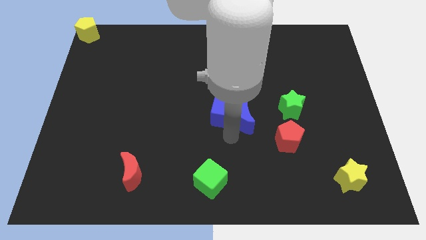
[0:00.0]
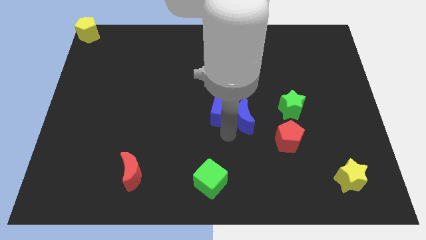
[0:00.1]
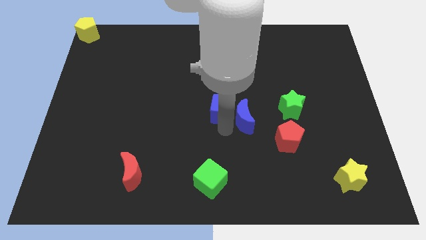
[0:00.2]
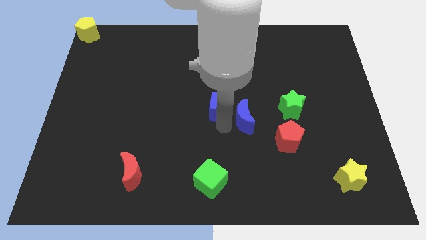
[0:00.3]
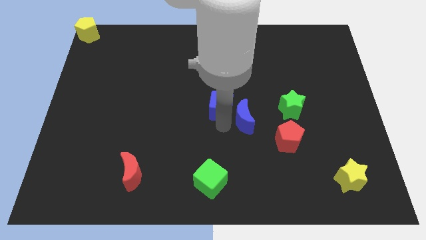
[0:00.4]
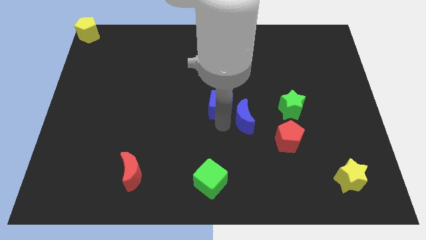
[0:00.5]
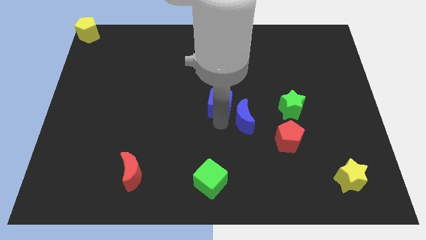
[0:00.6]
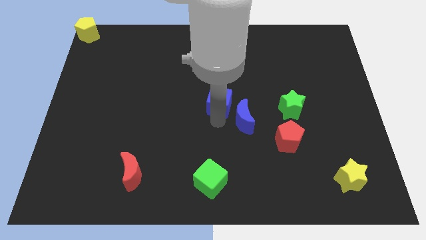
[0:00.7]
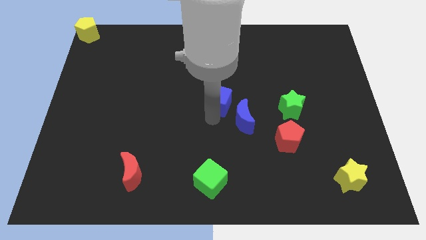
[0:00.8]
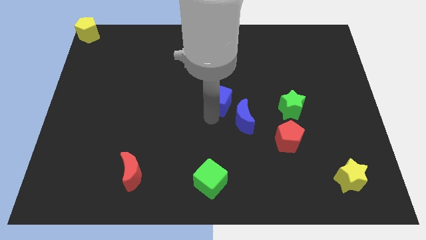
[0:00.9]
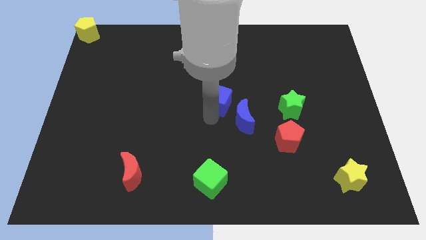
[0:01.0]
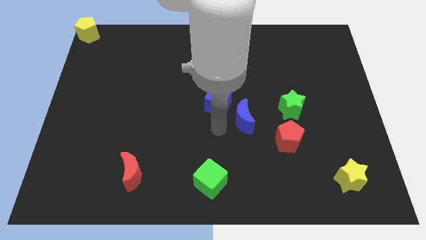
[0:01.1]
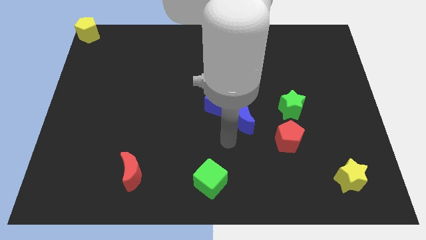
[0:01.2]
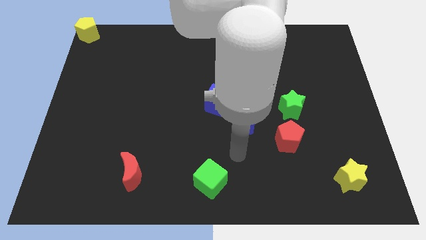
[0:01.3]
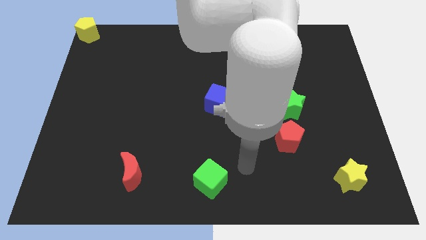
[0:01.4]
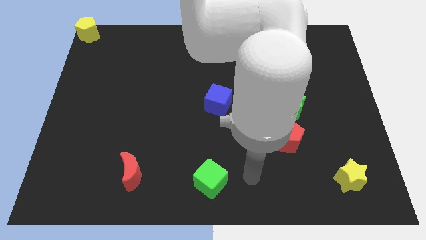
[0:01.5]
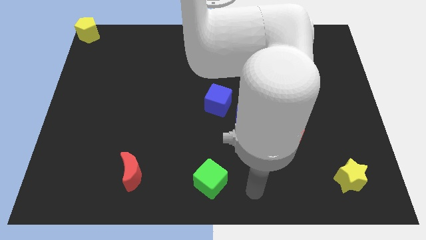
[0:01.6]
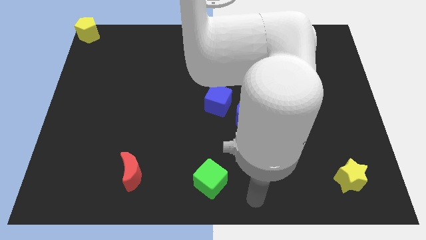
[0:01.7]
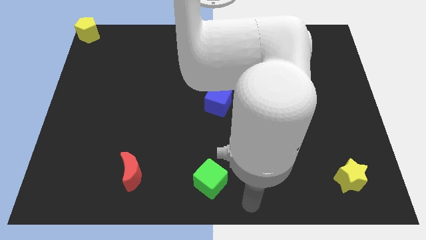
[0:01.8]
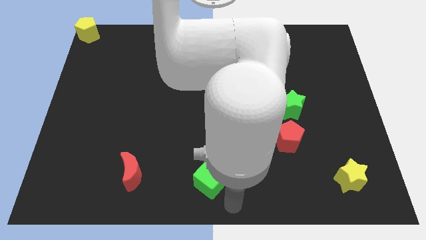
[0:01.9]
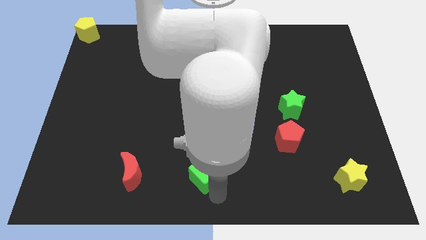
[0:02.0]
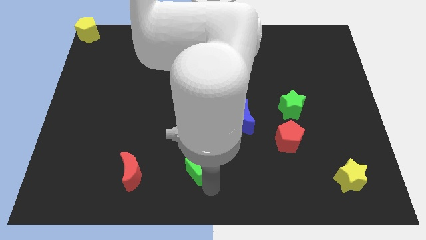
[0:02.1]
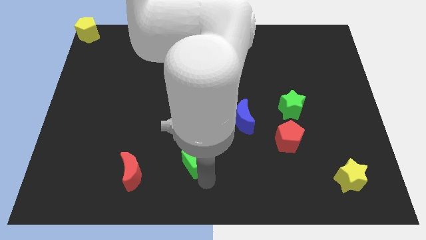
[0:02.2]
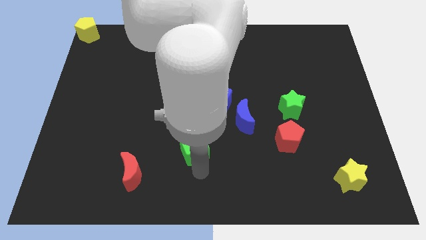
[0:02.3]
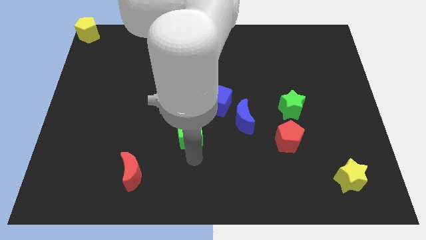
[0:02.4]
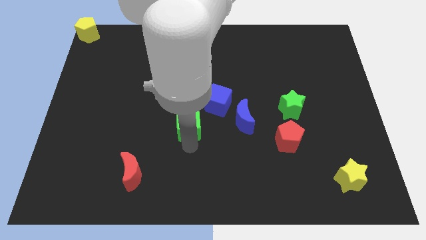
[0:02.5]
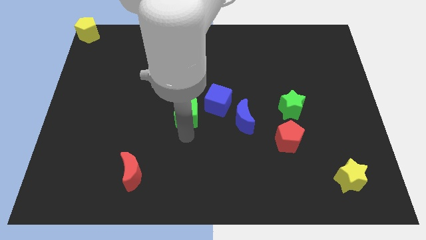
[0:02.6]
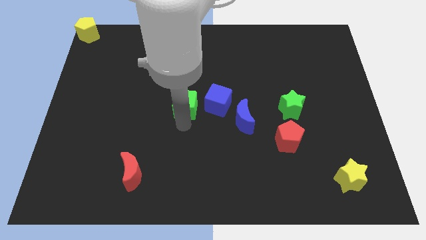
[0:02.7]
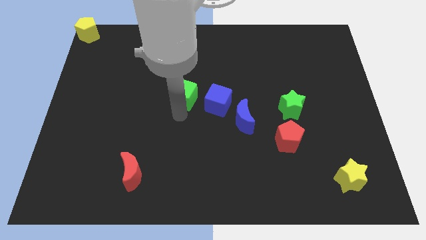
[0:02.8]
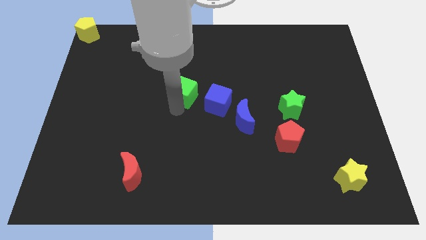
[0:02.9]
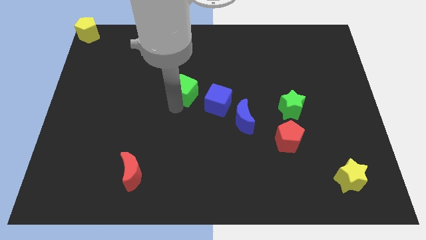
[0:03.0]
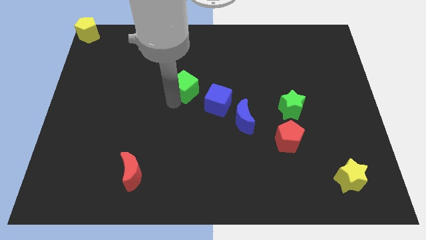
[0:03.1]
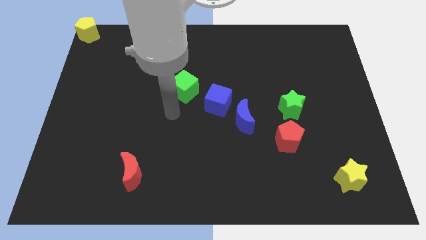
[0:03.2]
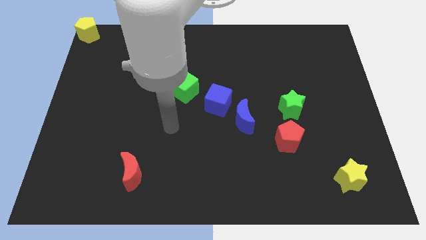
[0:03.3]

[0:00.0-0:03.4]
place the blue cube and green cube diagonally at the top left of the blue moon

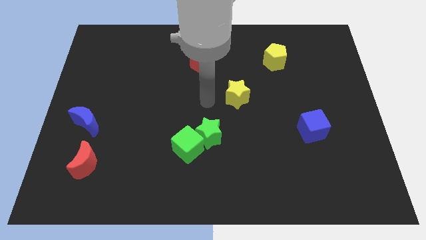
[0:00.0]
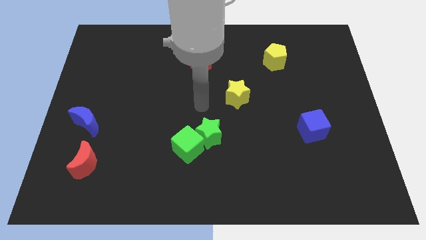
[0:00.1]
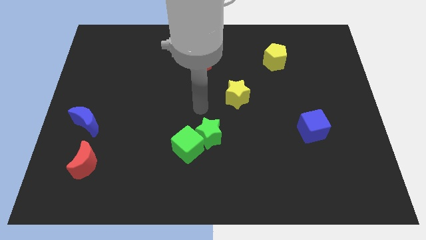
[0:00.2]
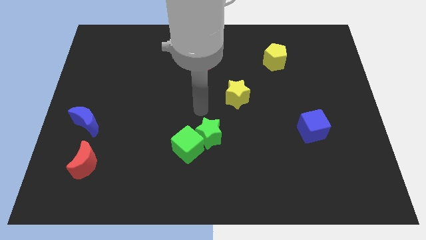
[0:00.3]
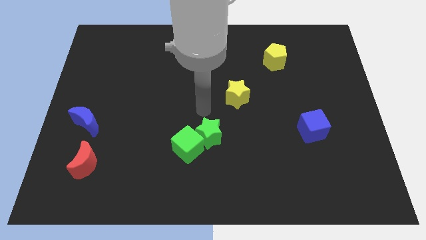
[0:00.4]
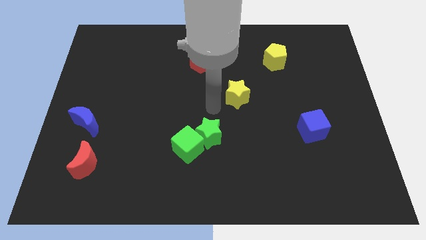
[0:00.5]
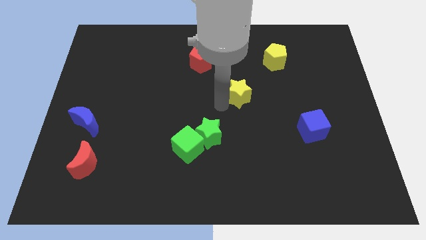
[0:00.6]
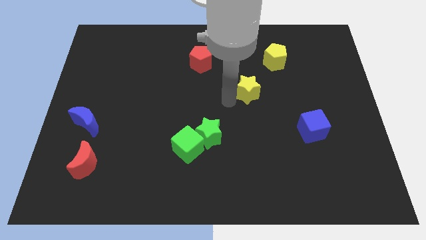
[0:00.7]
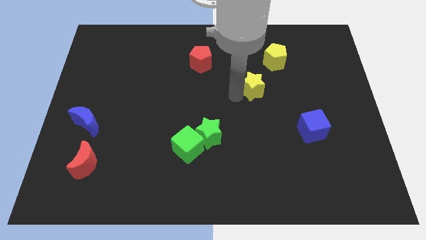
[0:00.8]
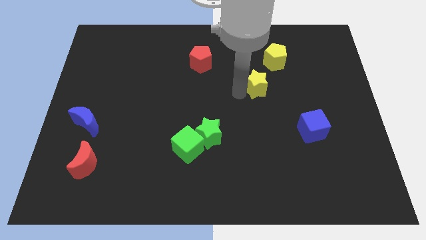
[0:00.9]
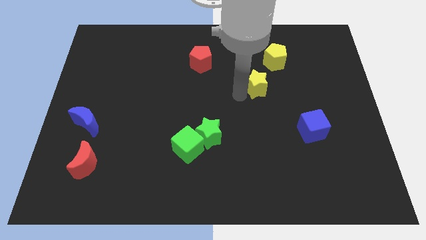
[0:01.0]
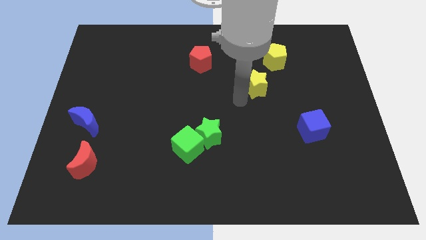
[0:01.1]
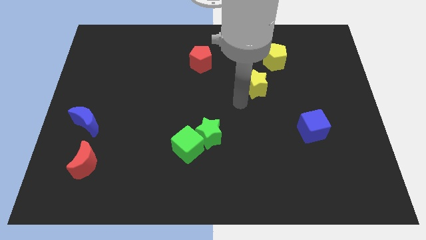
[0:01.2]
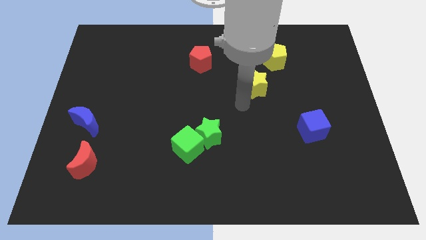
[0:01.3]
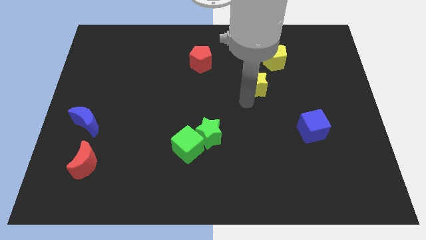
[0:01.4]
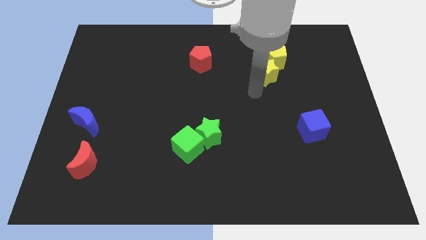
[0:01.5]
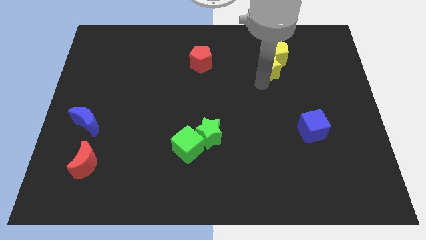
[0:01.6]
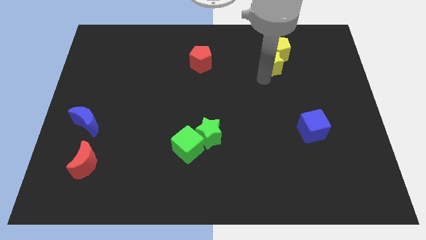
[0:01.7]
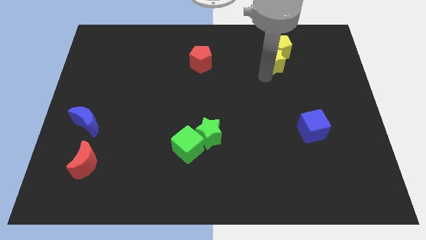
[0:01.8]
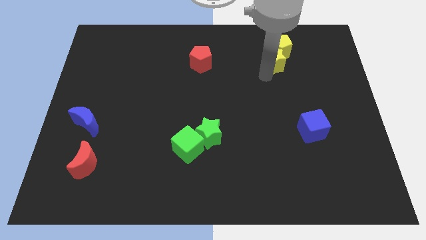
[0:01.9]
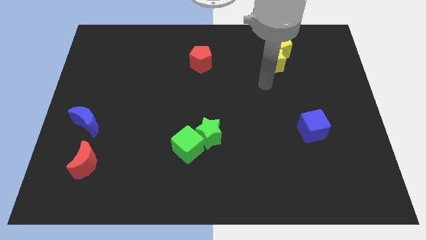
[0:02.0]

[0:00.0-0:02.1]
push the yellow star into yellow pentagon

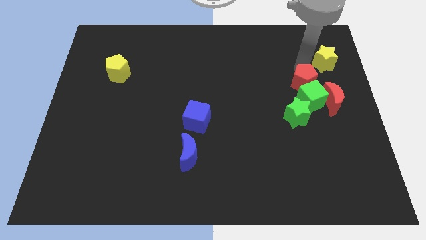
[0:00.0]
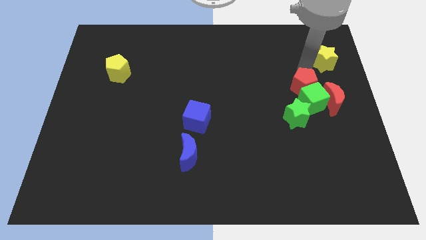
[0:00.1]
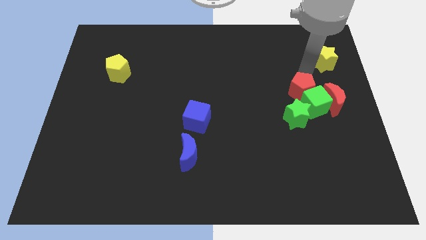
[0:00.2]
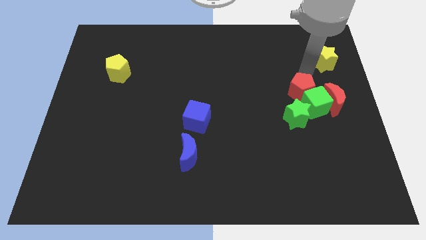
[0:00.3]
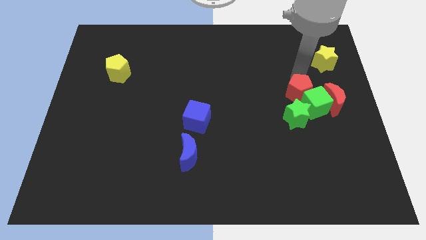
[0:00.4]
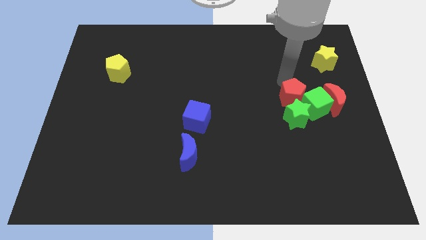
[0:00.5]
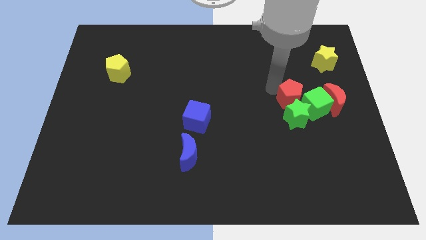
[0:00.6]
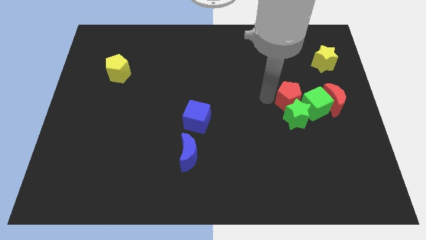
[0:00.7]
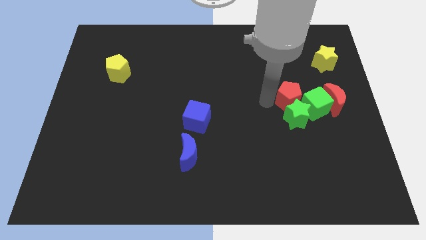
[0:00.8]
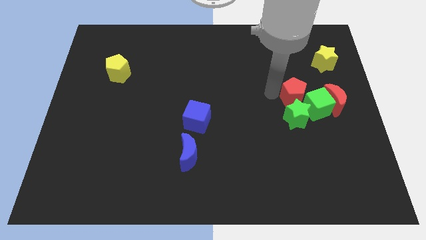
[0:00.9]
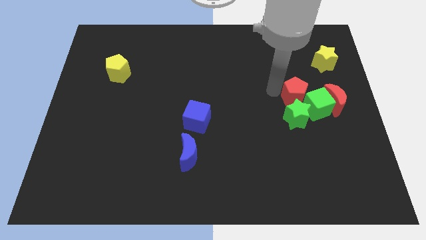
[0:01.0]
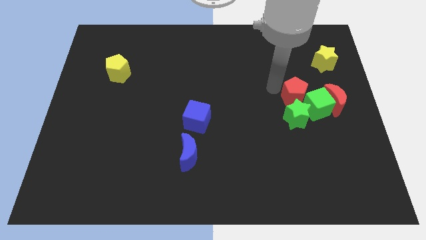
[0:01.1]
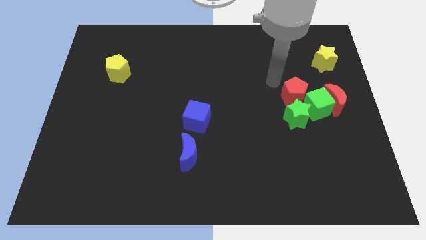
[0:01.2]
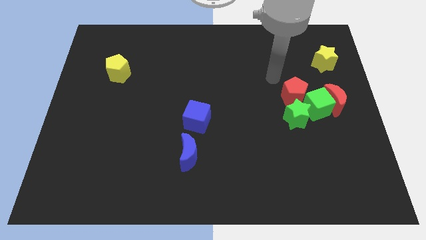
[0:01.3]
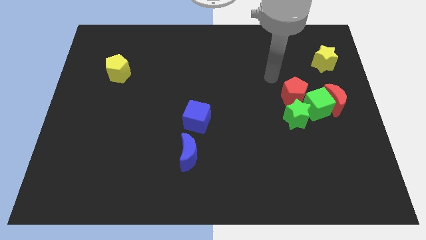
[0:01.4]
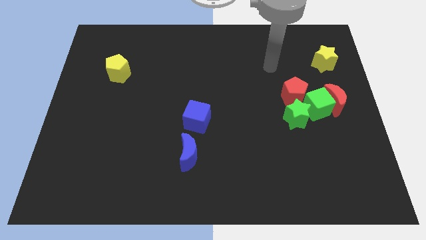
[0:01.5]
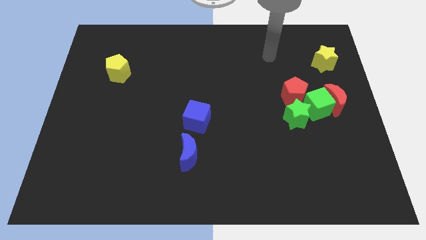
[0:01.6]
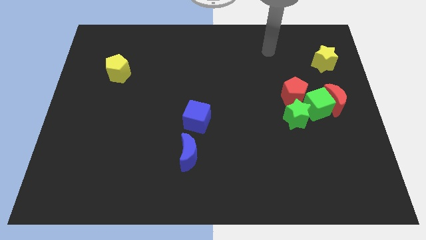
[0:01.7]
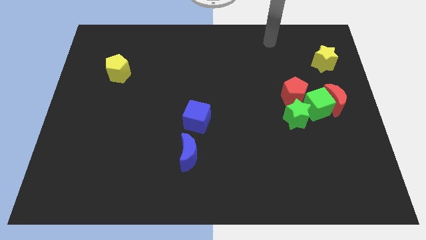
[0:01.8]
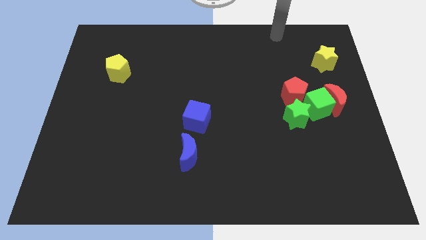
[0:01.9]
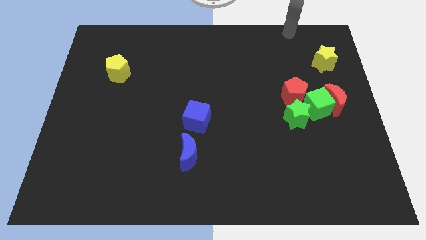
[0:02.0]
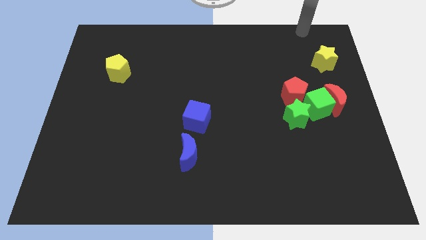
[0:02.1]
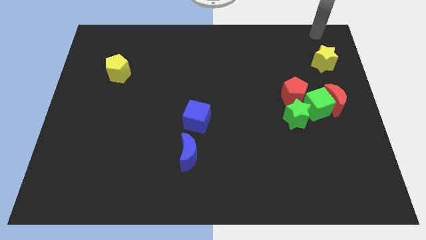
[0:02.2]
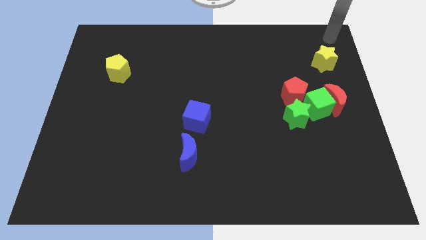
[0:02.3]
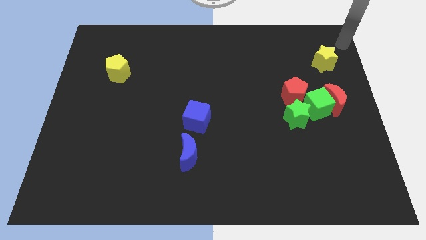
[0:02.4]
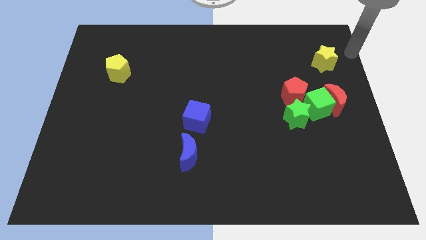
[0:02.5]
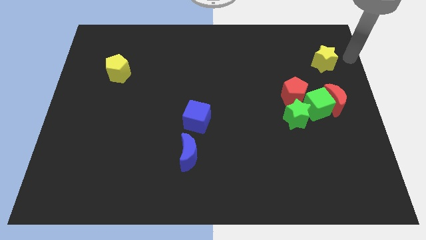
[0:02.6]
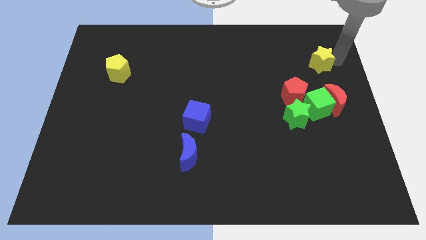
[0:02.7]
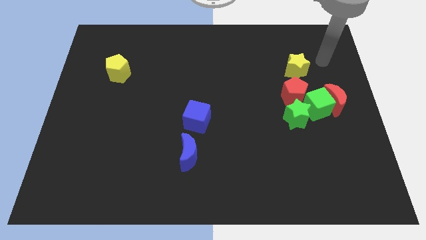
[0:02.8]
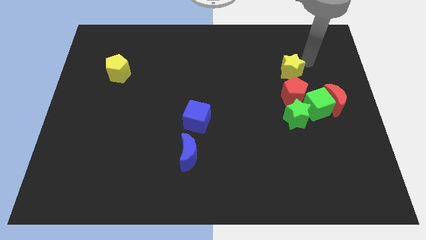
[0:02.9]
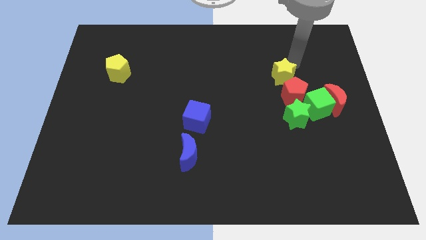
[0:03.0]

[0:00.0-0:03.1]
place yellow star above red pentagon

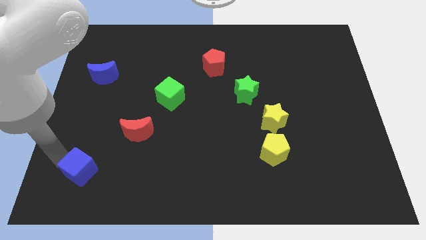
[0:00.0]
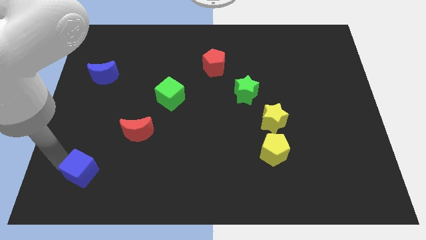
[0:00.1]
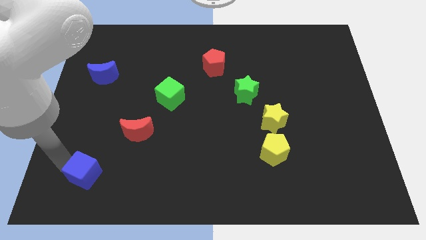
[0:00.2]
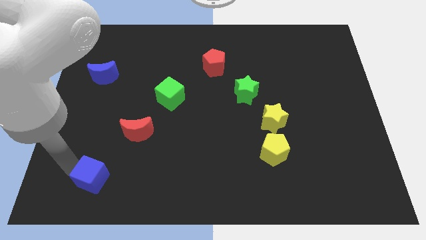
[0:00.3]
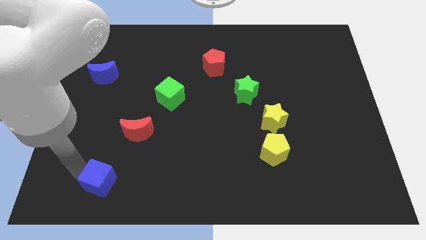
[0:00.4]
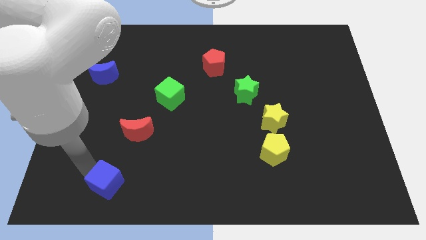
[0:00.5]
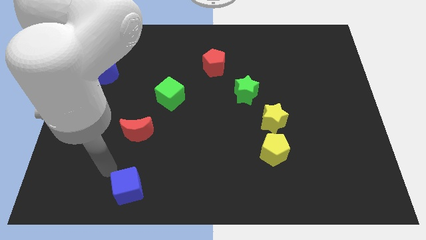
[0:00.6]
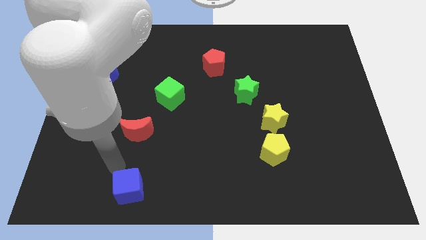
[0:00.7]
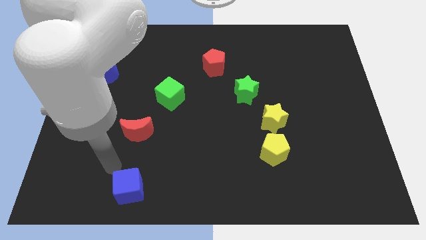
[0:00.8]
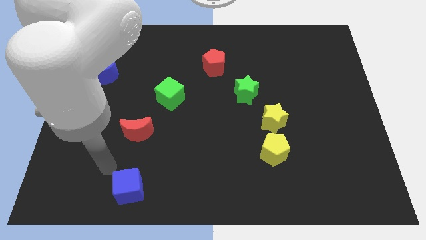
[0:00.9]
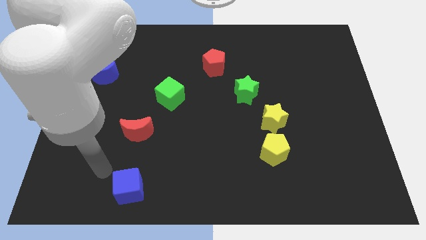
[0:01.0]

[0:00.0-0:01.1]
move the blue cube to the bottom of the board
